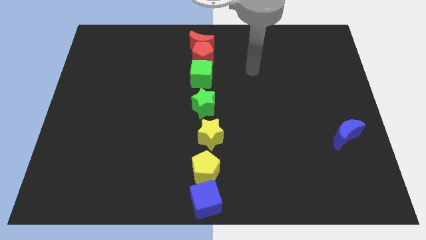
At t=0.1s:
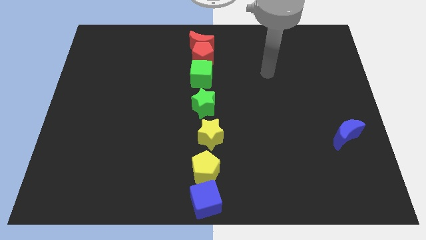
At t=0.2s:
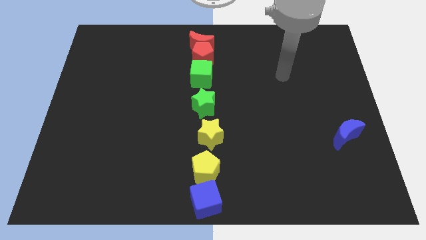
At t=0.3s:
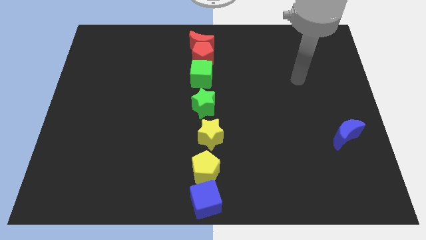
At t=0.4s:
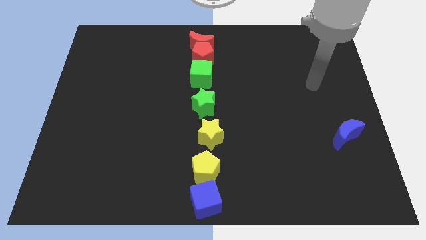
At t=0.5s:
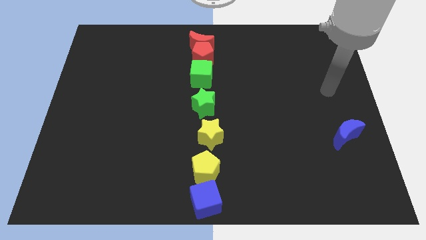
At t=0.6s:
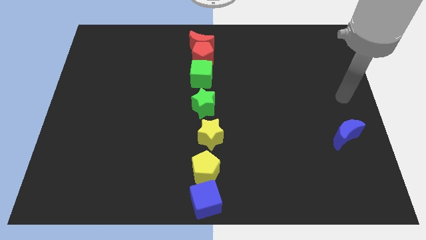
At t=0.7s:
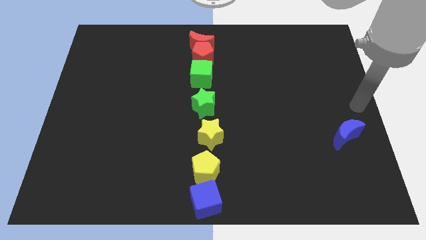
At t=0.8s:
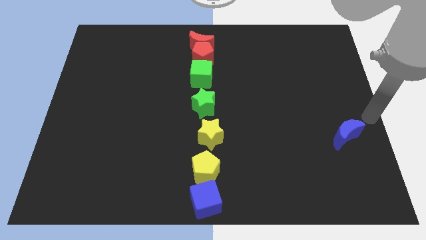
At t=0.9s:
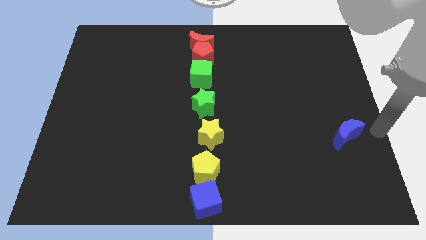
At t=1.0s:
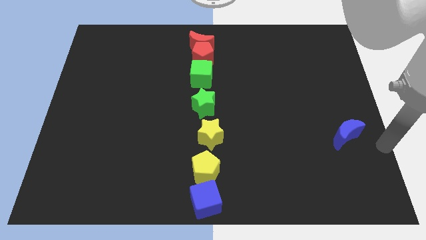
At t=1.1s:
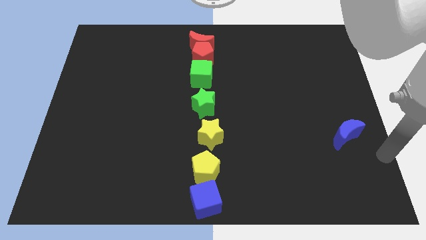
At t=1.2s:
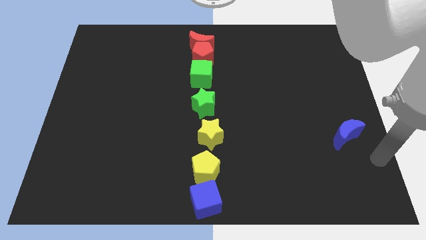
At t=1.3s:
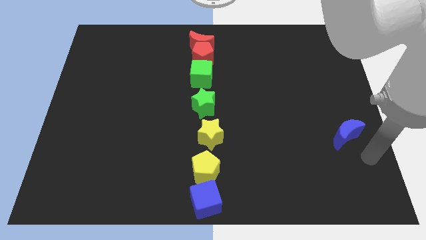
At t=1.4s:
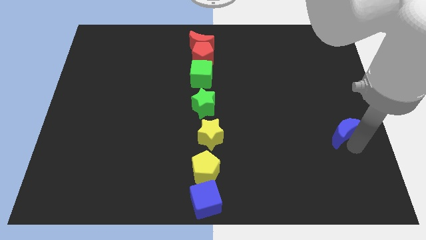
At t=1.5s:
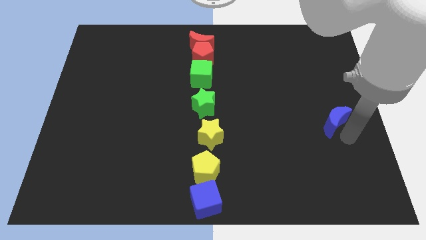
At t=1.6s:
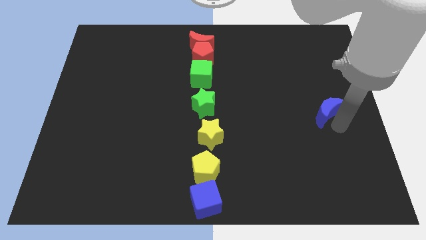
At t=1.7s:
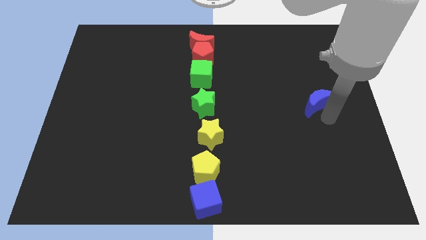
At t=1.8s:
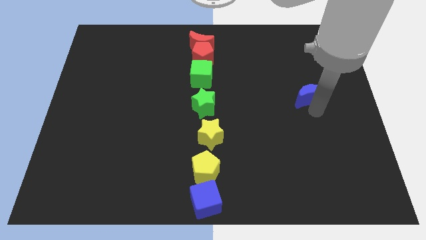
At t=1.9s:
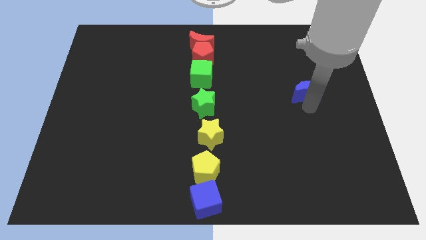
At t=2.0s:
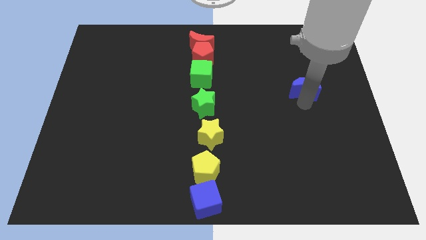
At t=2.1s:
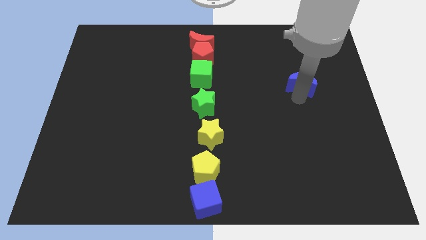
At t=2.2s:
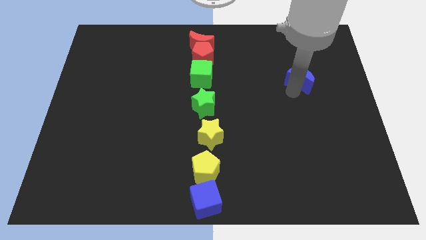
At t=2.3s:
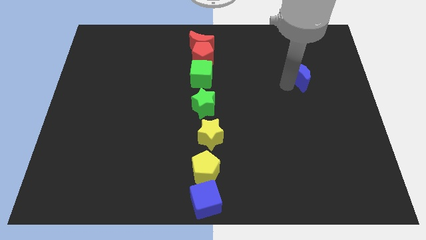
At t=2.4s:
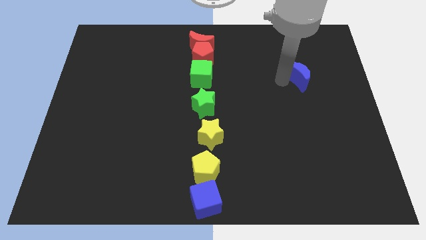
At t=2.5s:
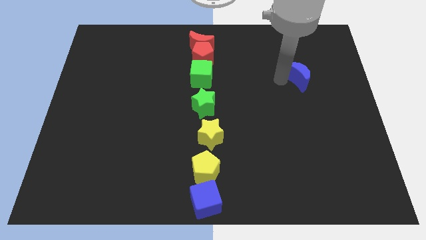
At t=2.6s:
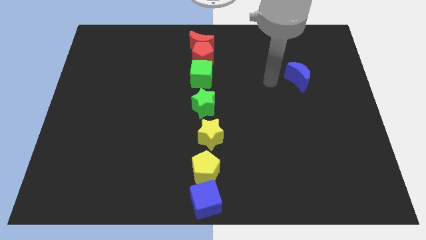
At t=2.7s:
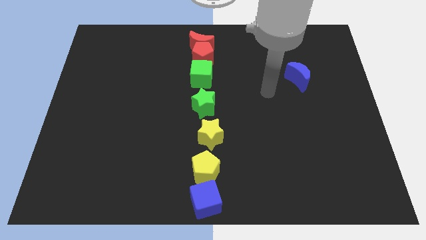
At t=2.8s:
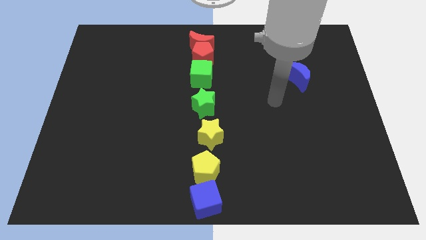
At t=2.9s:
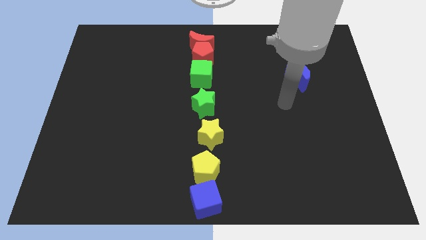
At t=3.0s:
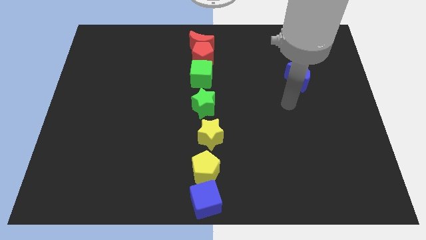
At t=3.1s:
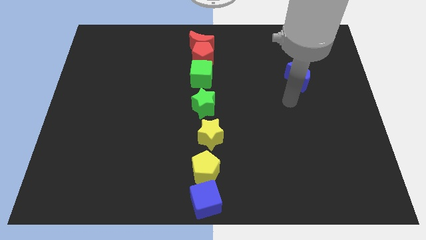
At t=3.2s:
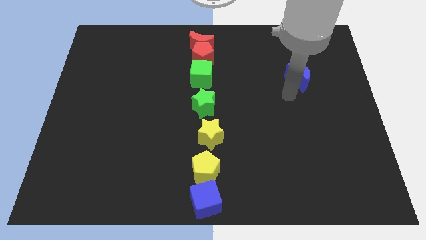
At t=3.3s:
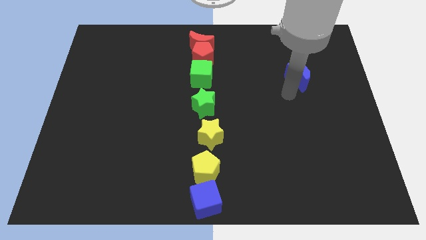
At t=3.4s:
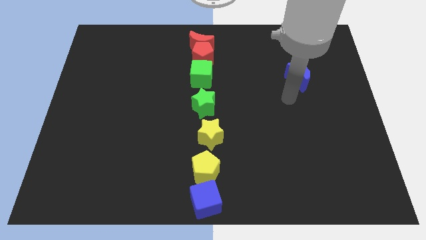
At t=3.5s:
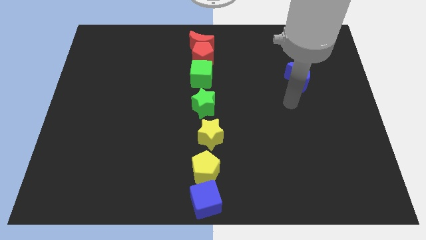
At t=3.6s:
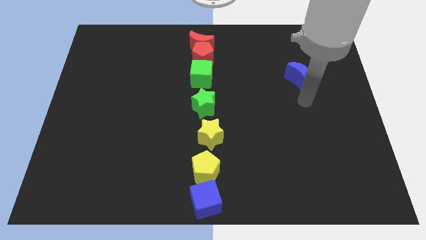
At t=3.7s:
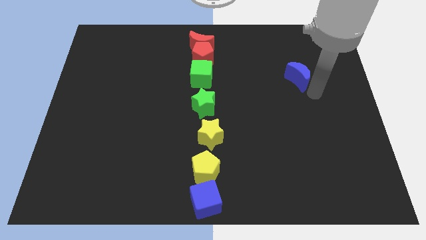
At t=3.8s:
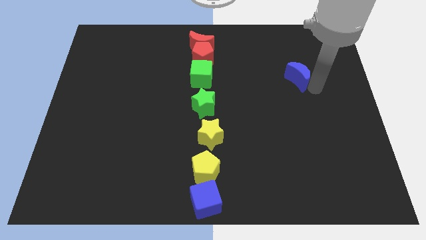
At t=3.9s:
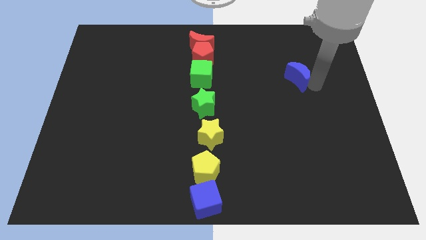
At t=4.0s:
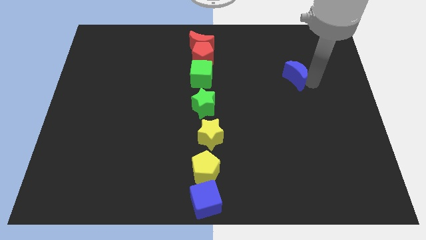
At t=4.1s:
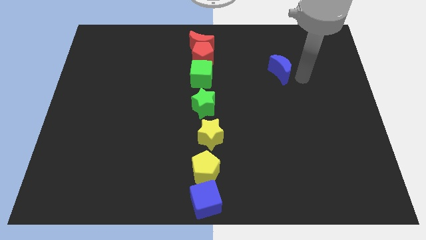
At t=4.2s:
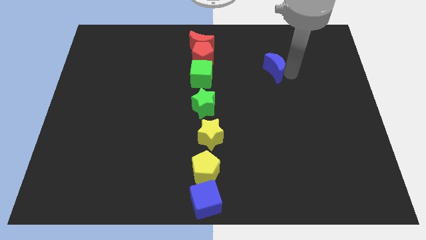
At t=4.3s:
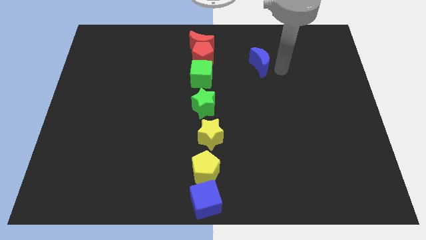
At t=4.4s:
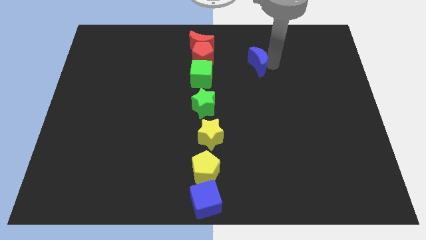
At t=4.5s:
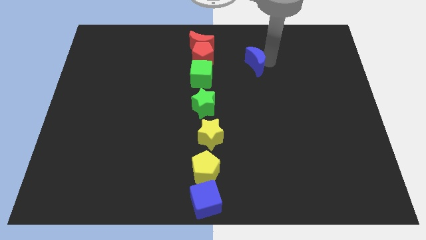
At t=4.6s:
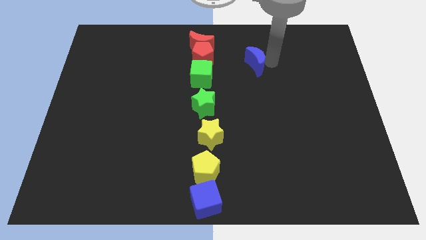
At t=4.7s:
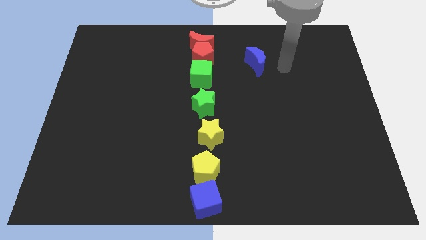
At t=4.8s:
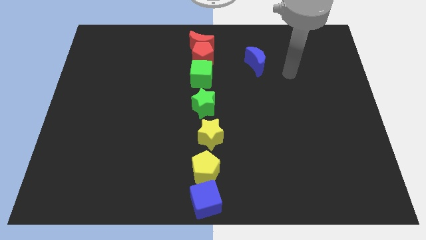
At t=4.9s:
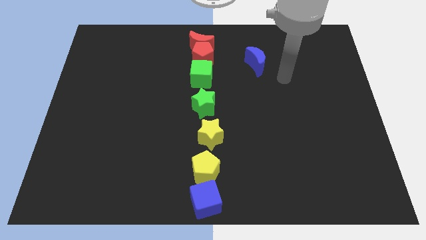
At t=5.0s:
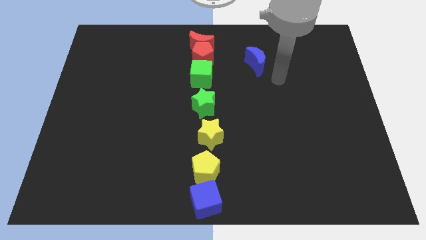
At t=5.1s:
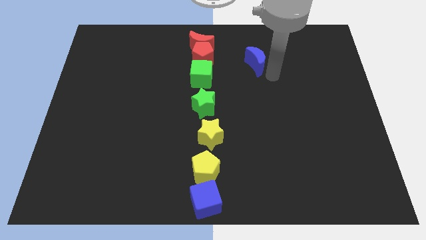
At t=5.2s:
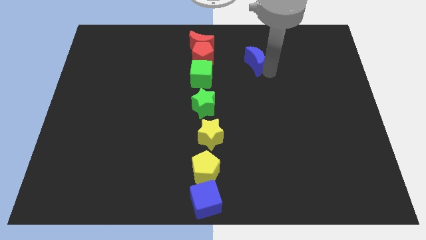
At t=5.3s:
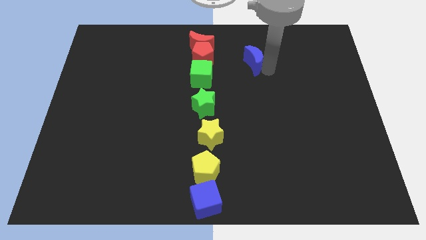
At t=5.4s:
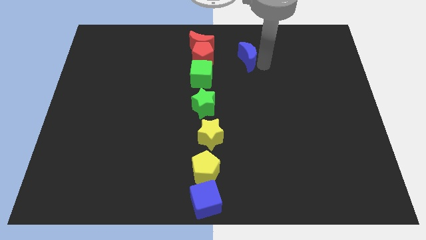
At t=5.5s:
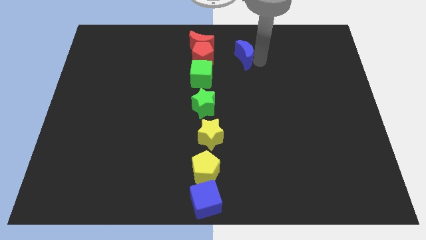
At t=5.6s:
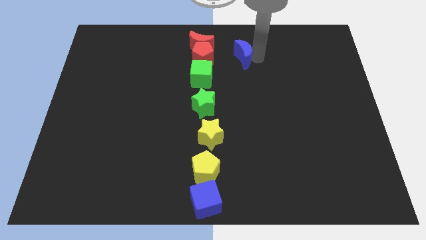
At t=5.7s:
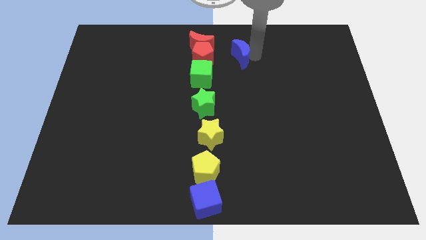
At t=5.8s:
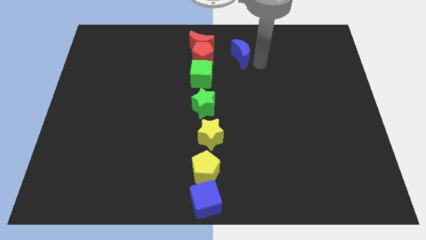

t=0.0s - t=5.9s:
move the blue crescent to the top left of the board

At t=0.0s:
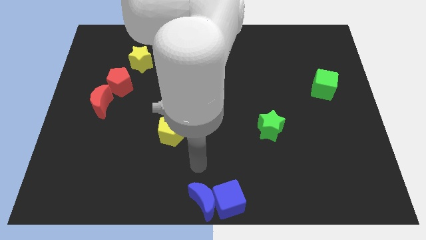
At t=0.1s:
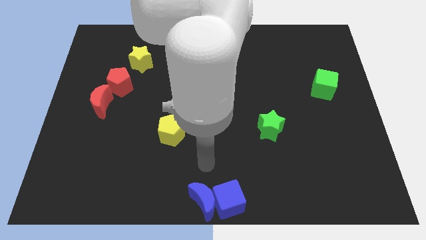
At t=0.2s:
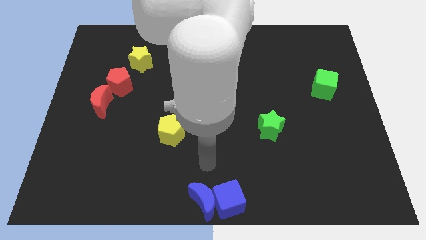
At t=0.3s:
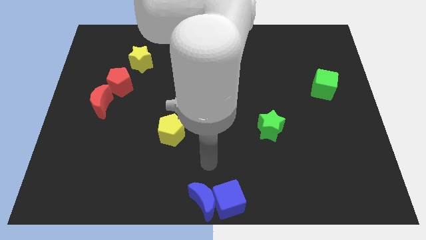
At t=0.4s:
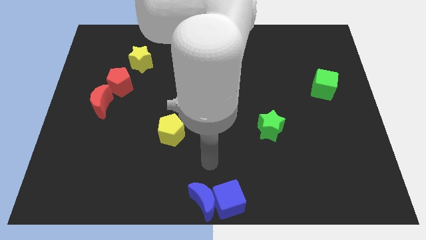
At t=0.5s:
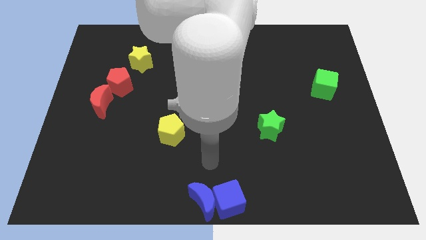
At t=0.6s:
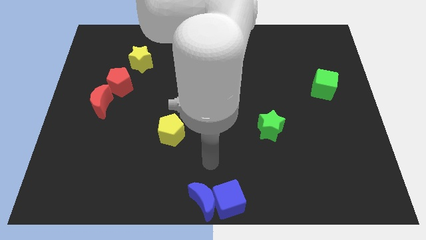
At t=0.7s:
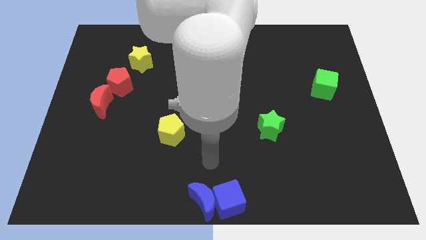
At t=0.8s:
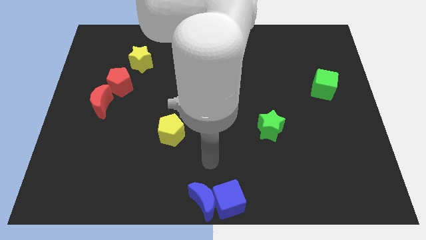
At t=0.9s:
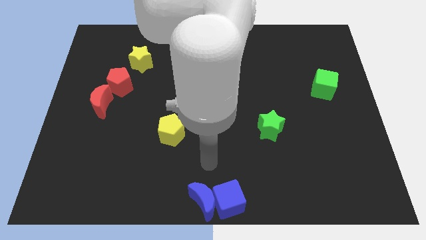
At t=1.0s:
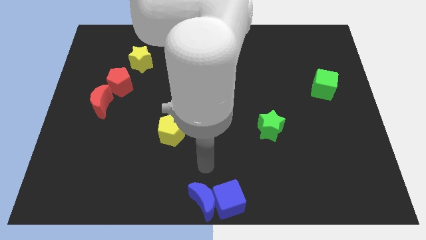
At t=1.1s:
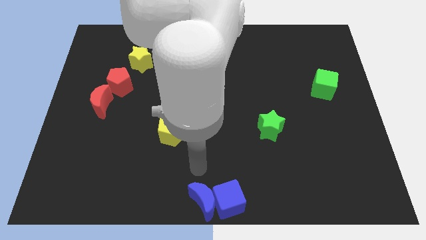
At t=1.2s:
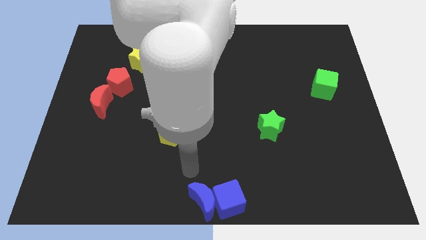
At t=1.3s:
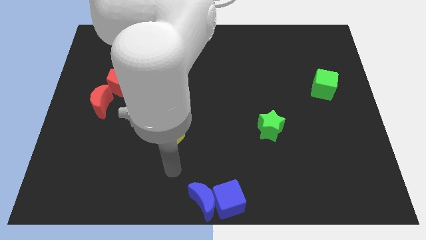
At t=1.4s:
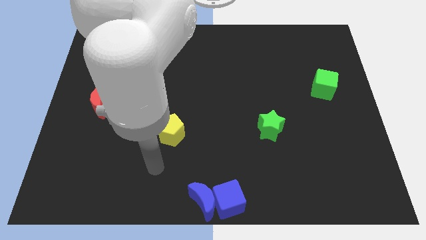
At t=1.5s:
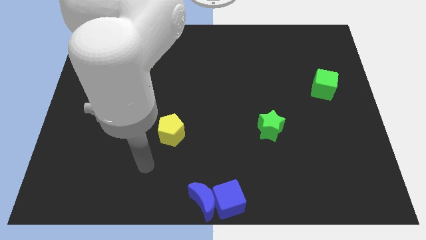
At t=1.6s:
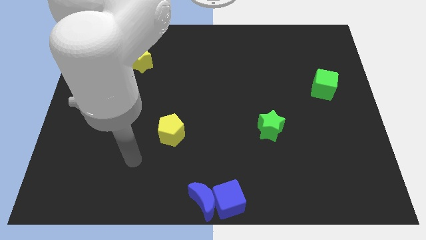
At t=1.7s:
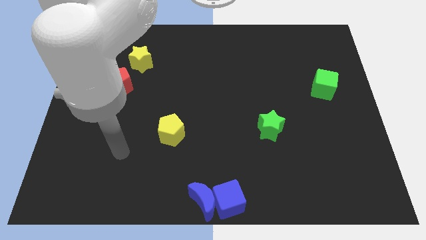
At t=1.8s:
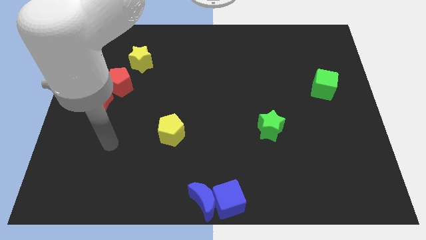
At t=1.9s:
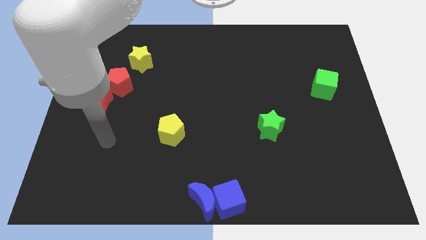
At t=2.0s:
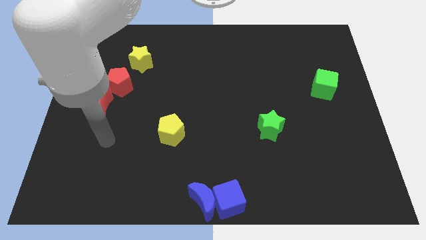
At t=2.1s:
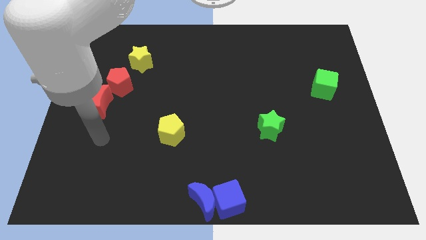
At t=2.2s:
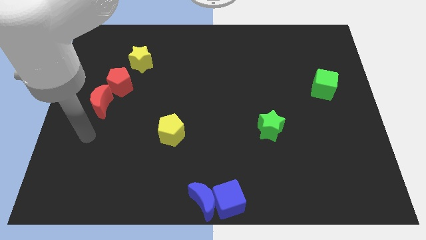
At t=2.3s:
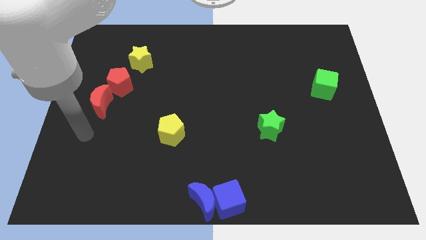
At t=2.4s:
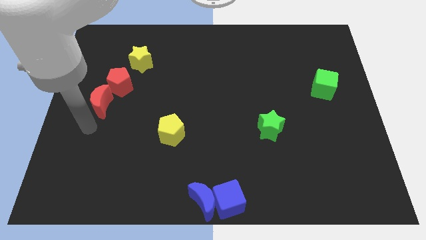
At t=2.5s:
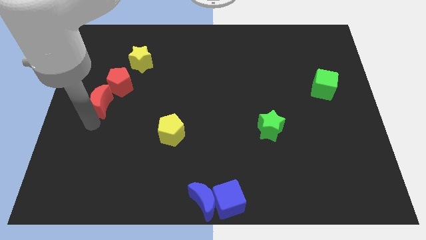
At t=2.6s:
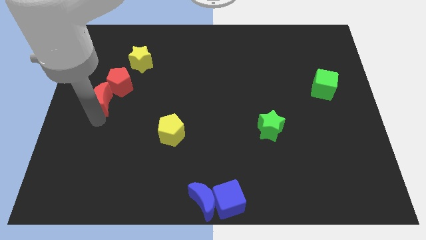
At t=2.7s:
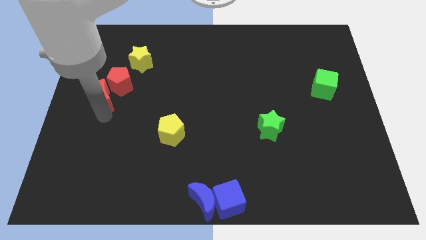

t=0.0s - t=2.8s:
go near to the red moon

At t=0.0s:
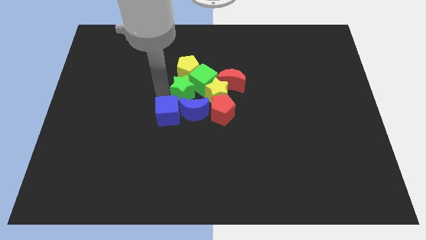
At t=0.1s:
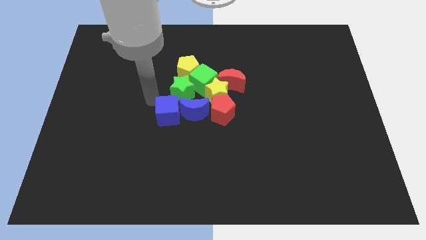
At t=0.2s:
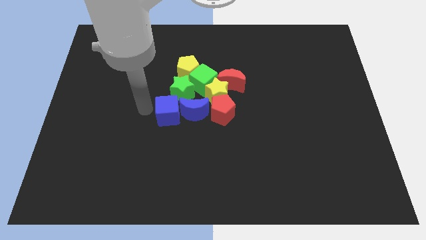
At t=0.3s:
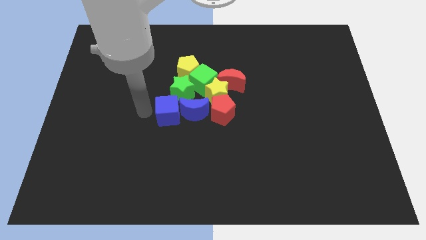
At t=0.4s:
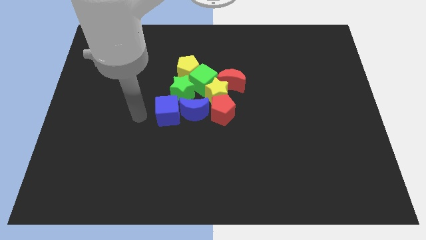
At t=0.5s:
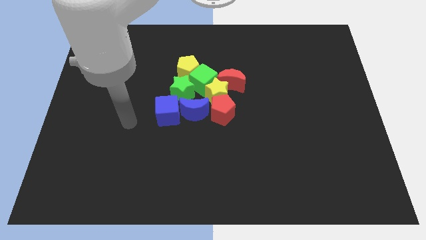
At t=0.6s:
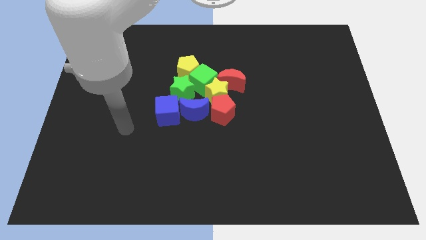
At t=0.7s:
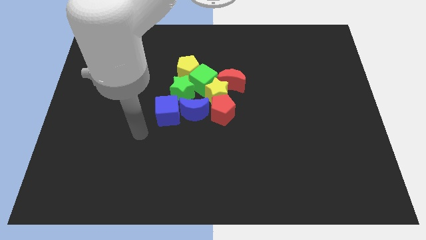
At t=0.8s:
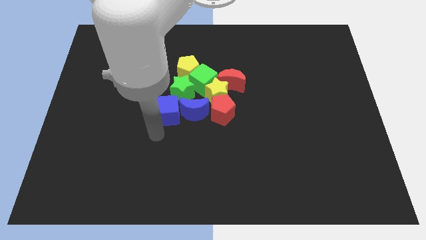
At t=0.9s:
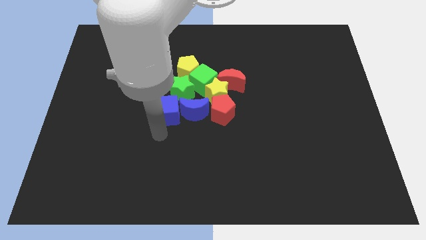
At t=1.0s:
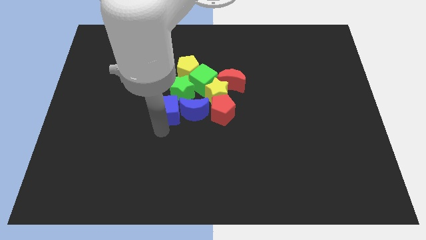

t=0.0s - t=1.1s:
place your hand under the blue square
